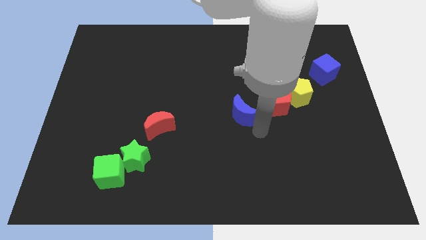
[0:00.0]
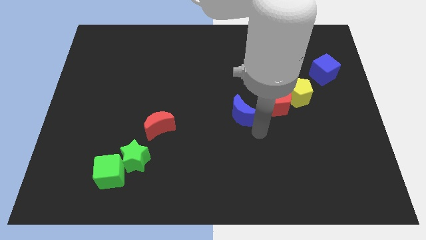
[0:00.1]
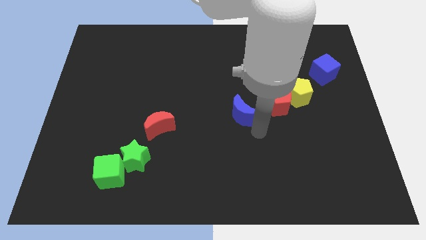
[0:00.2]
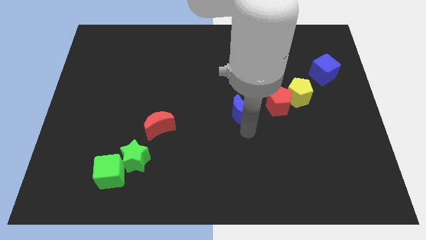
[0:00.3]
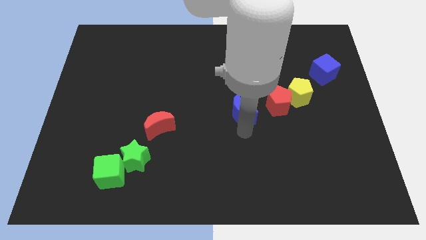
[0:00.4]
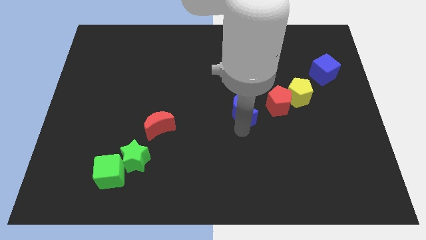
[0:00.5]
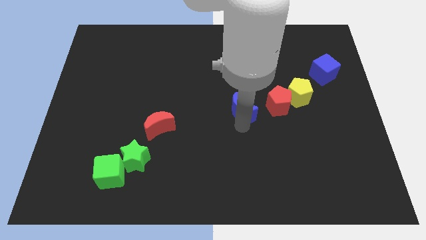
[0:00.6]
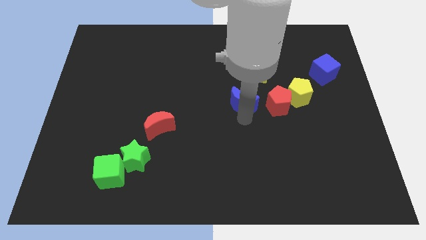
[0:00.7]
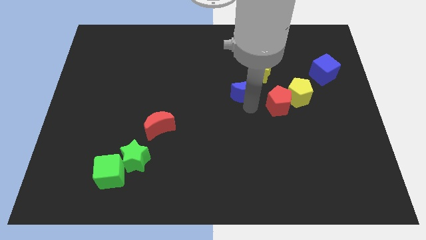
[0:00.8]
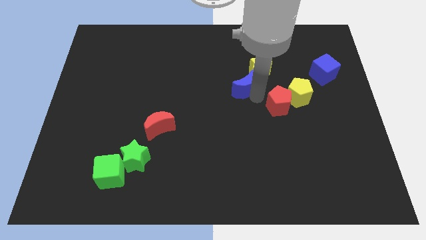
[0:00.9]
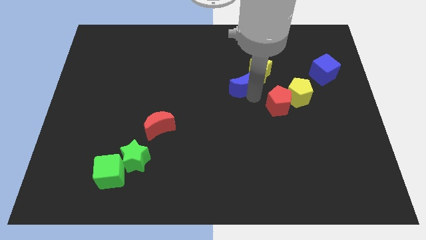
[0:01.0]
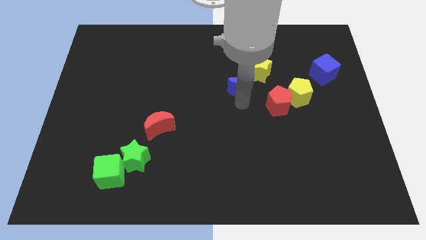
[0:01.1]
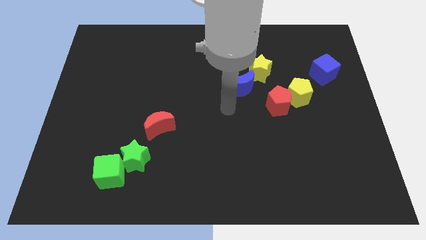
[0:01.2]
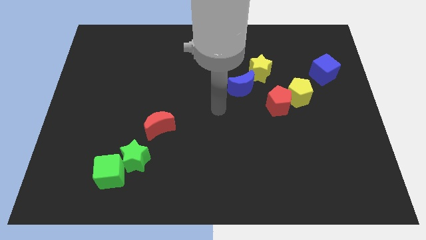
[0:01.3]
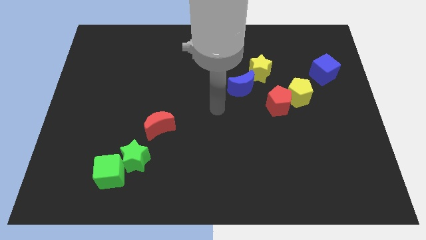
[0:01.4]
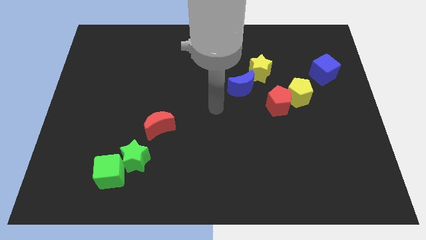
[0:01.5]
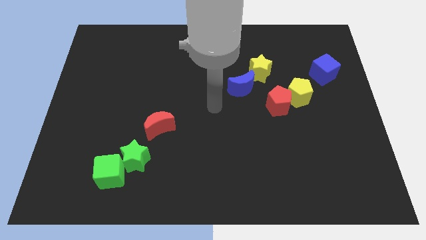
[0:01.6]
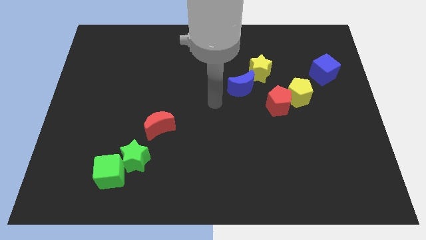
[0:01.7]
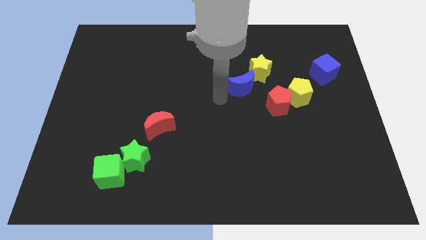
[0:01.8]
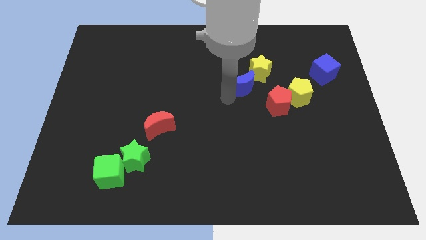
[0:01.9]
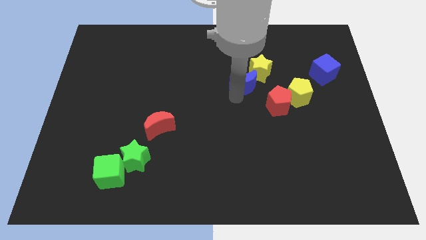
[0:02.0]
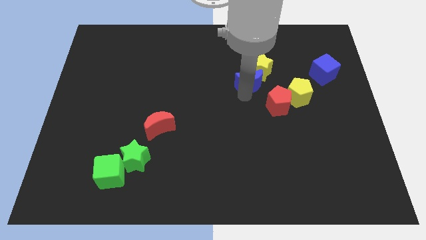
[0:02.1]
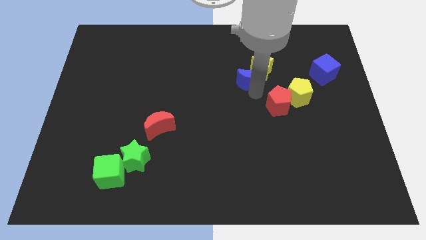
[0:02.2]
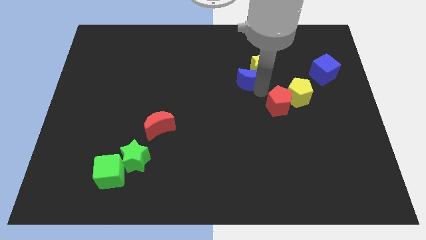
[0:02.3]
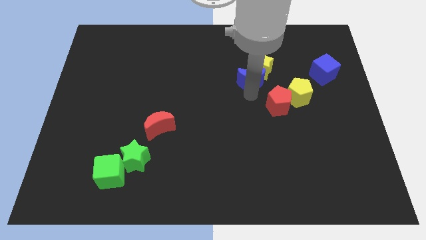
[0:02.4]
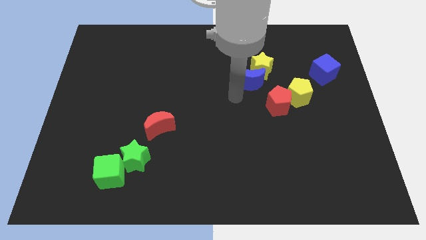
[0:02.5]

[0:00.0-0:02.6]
push the blue moon into yellow star

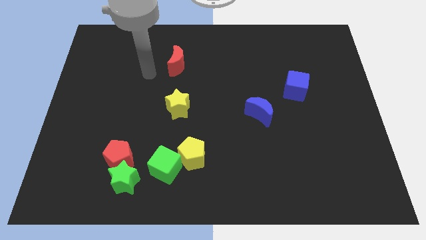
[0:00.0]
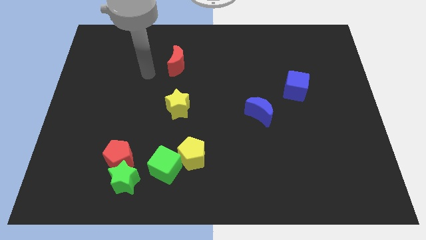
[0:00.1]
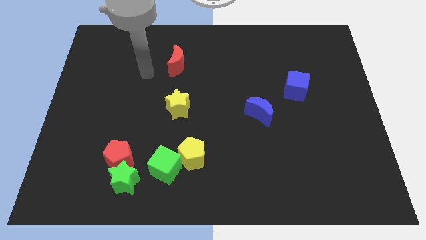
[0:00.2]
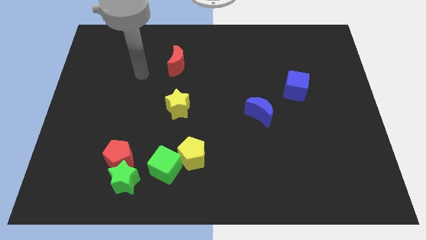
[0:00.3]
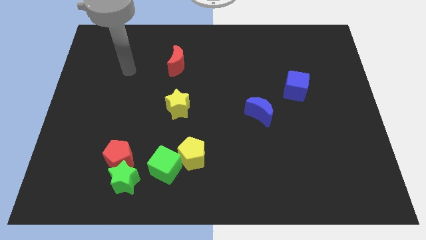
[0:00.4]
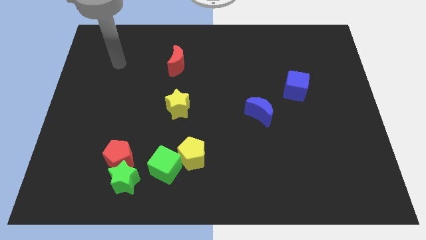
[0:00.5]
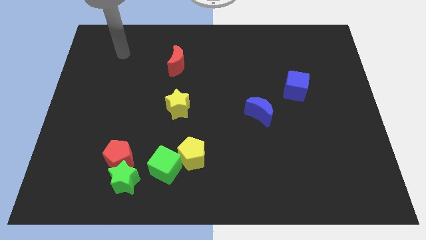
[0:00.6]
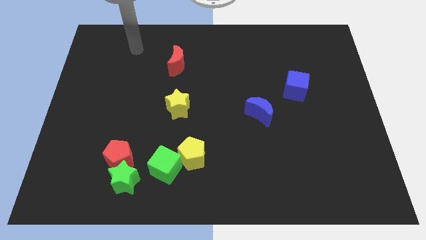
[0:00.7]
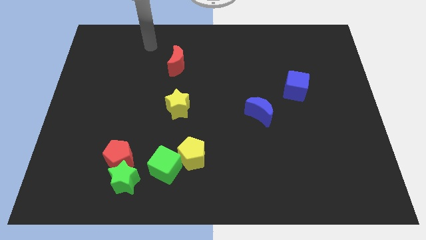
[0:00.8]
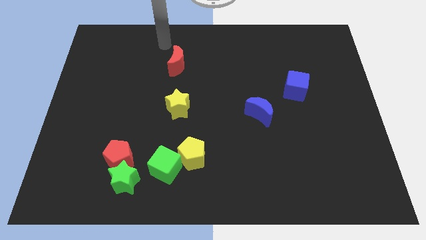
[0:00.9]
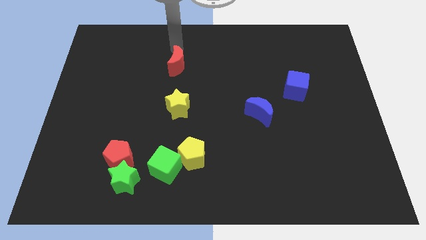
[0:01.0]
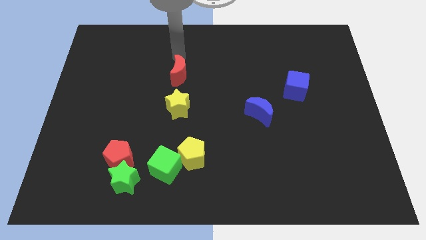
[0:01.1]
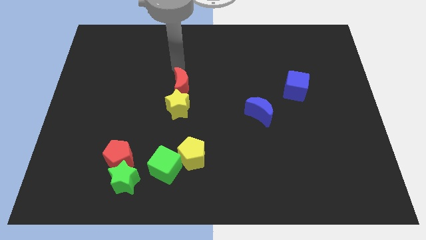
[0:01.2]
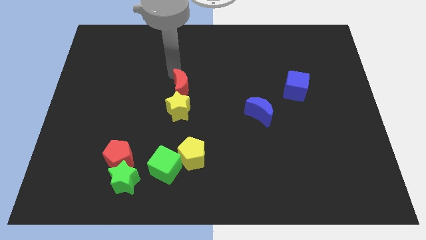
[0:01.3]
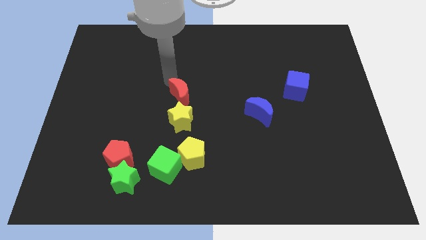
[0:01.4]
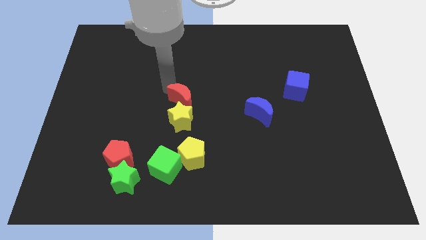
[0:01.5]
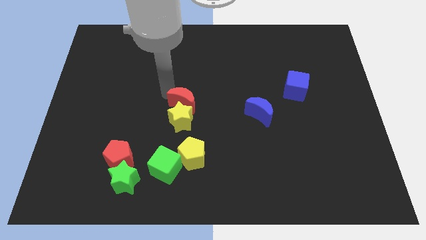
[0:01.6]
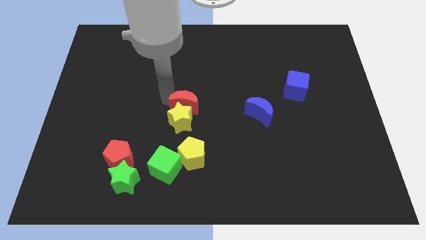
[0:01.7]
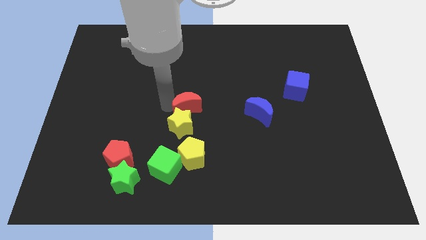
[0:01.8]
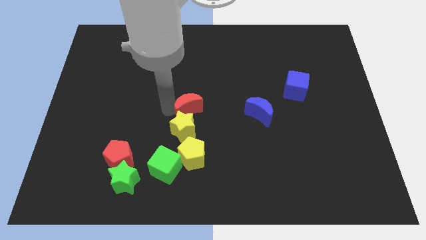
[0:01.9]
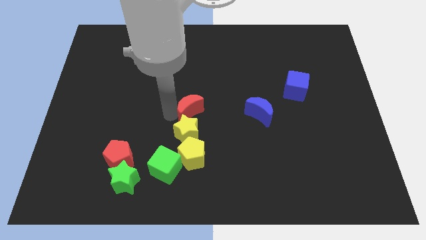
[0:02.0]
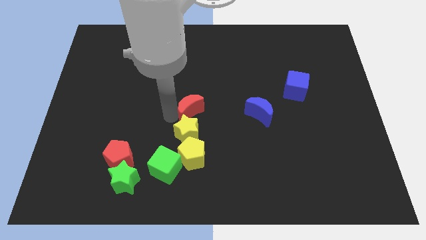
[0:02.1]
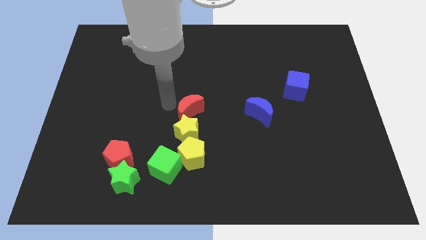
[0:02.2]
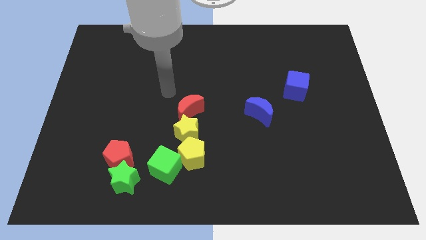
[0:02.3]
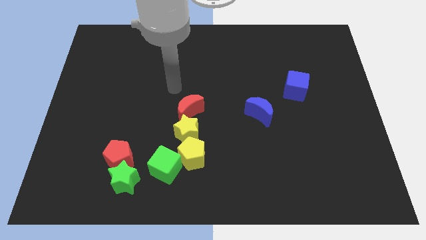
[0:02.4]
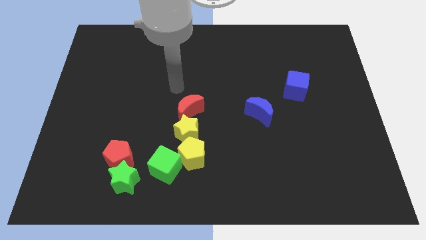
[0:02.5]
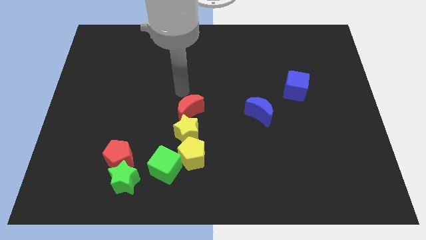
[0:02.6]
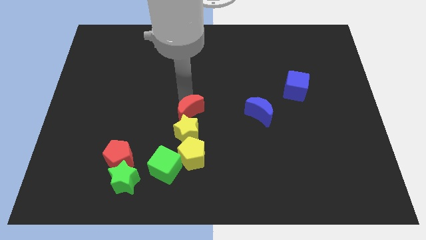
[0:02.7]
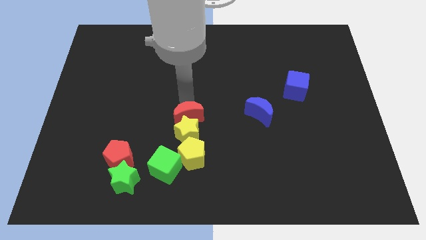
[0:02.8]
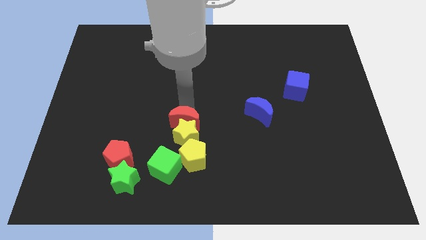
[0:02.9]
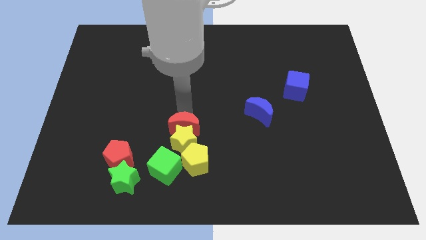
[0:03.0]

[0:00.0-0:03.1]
move the red crescent into the yellow star

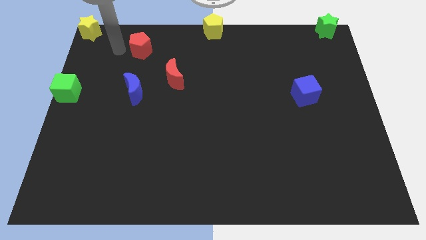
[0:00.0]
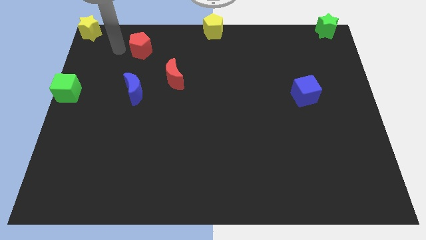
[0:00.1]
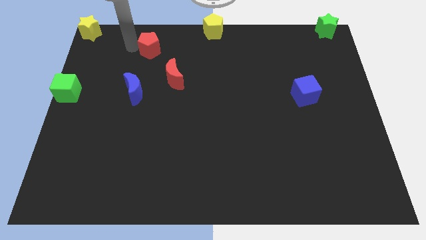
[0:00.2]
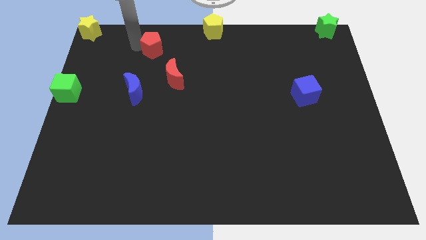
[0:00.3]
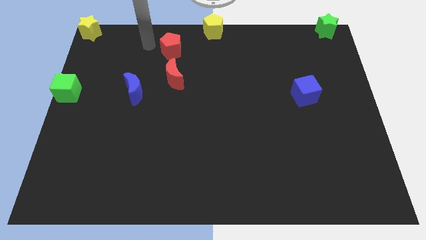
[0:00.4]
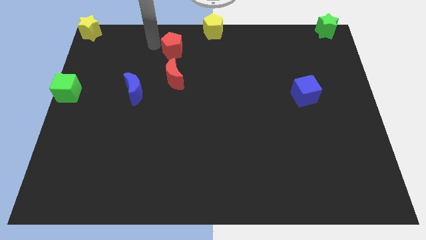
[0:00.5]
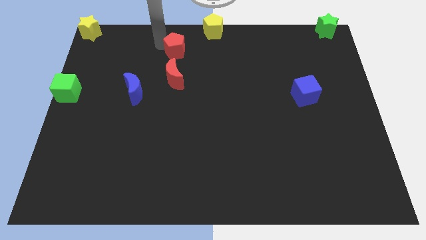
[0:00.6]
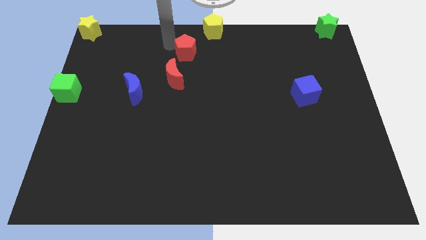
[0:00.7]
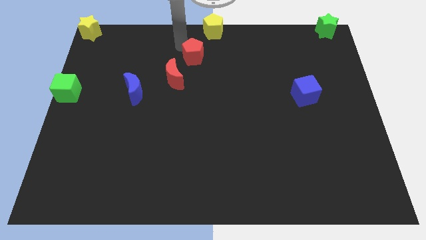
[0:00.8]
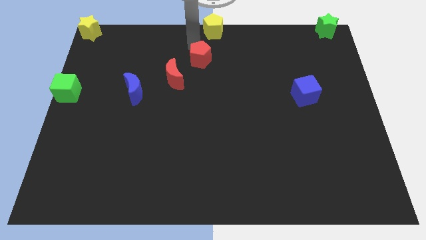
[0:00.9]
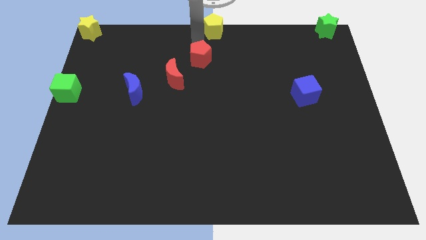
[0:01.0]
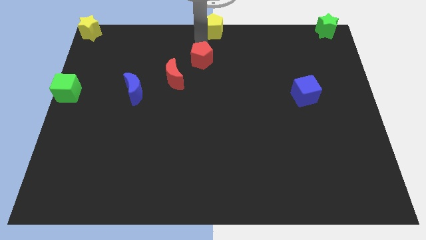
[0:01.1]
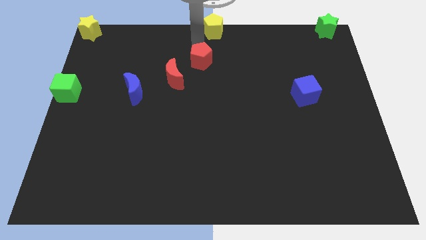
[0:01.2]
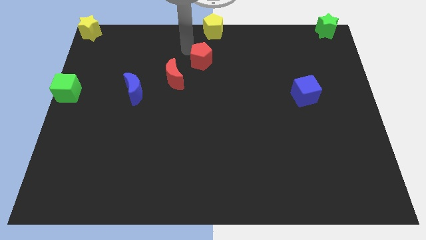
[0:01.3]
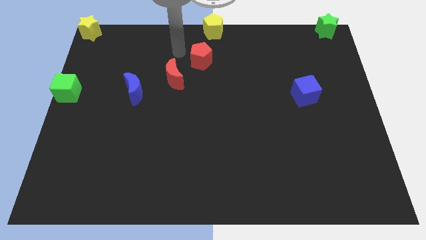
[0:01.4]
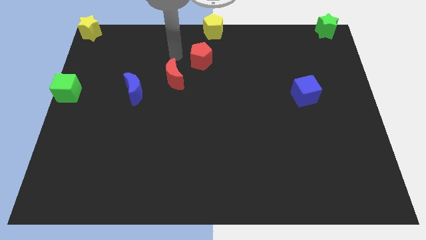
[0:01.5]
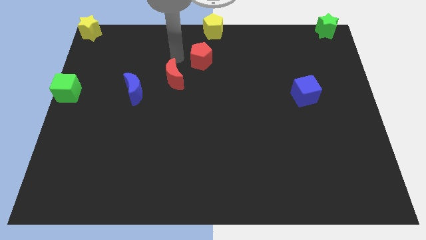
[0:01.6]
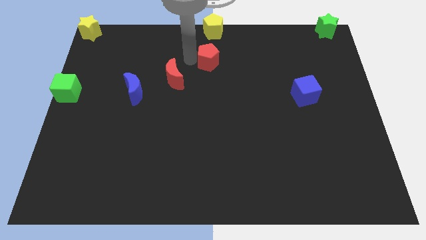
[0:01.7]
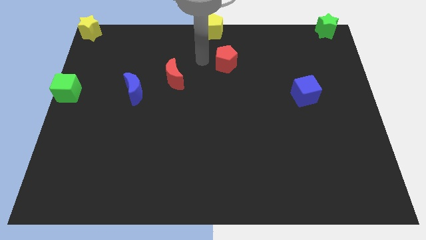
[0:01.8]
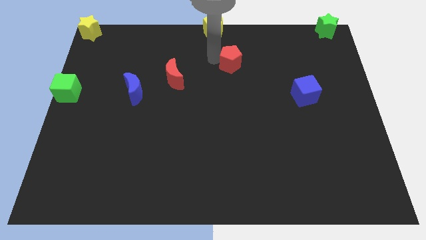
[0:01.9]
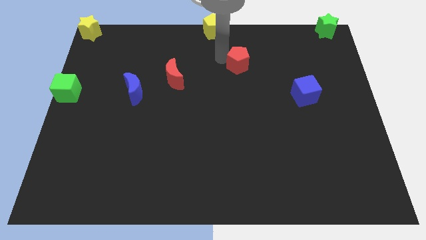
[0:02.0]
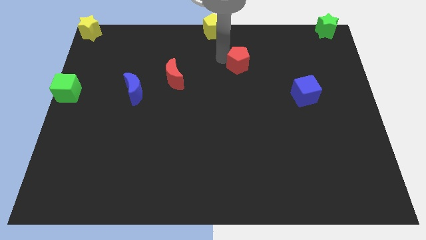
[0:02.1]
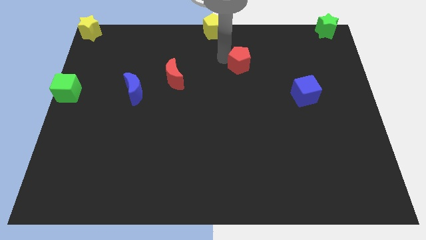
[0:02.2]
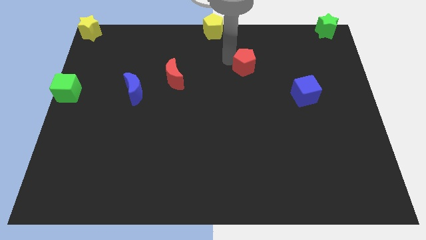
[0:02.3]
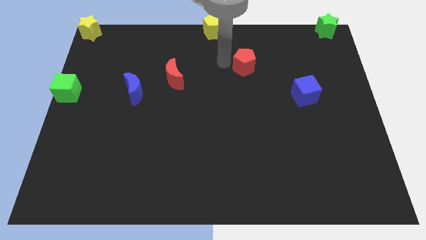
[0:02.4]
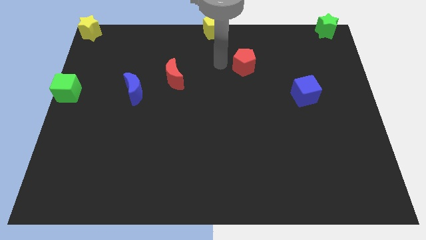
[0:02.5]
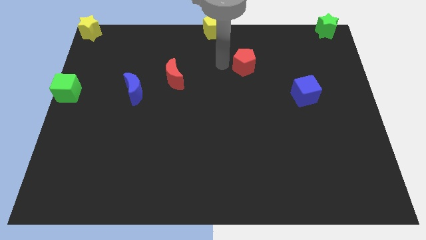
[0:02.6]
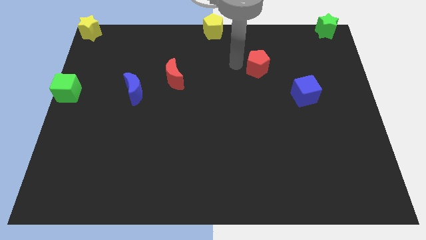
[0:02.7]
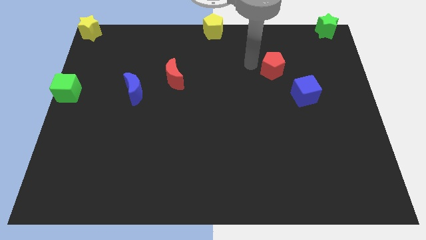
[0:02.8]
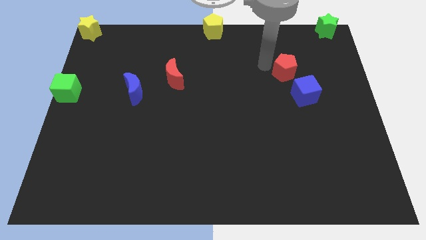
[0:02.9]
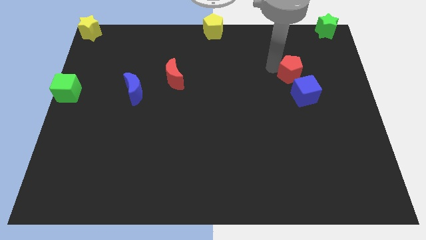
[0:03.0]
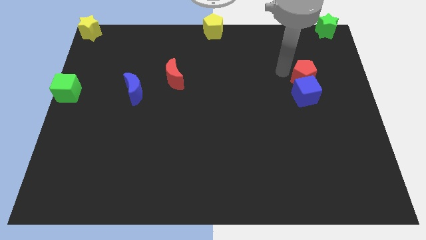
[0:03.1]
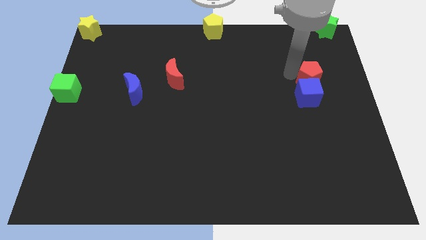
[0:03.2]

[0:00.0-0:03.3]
place red pentagon above blue cube
